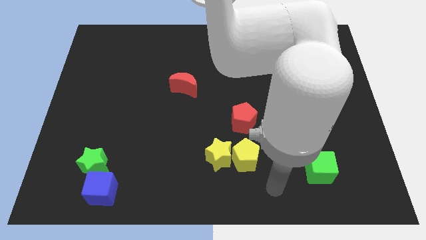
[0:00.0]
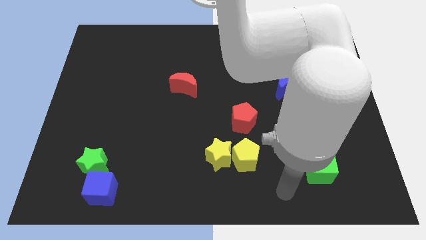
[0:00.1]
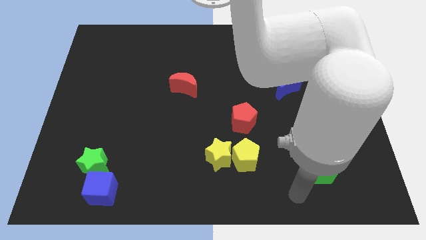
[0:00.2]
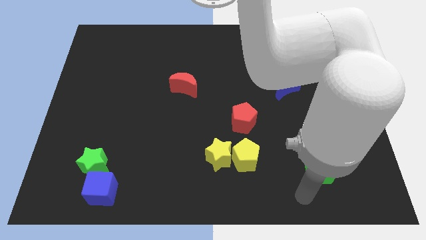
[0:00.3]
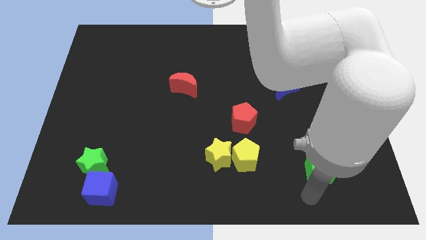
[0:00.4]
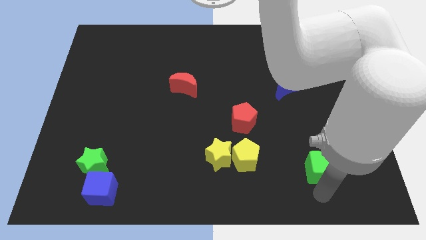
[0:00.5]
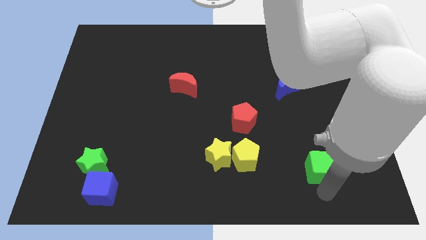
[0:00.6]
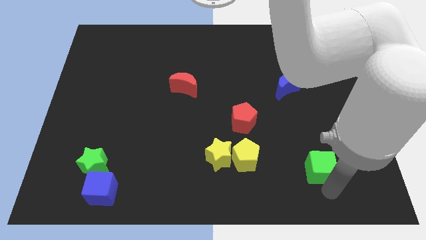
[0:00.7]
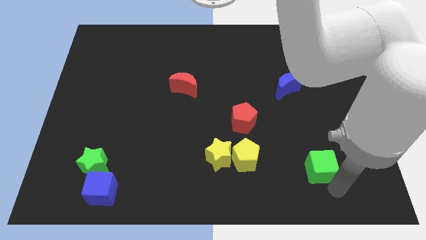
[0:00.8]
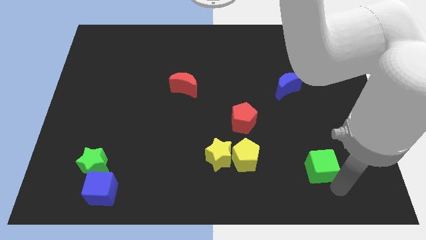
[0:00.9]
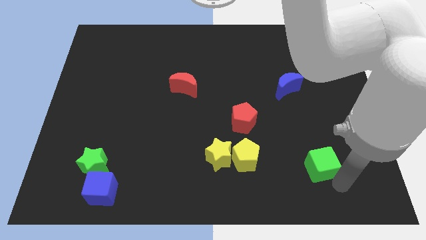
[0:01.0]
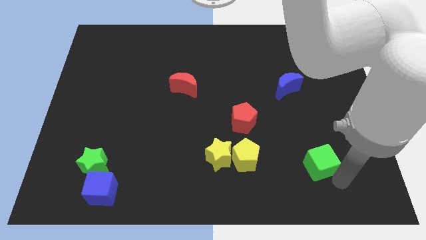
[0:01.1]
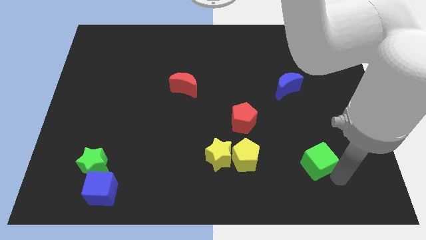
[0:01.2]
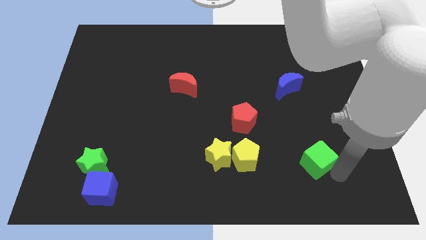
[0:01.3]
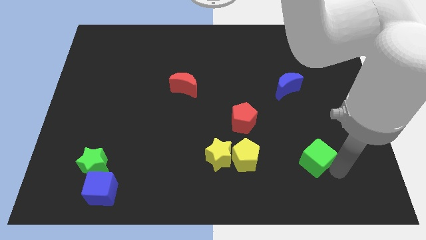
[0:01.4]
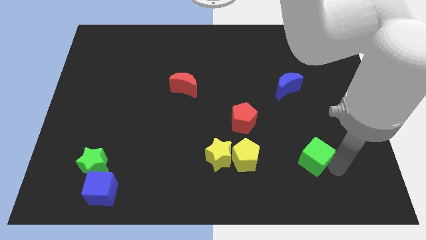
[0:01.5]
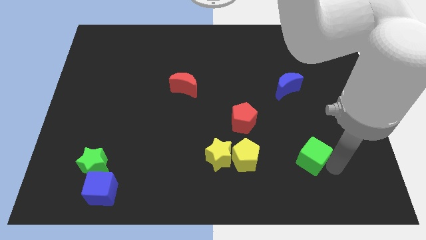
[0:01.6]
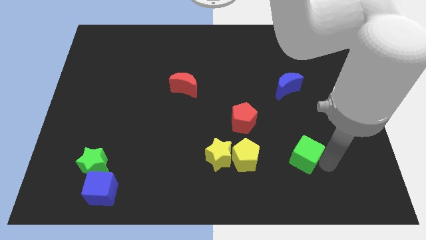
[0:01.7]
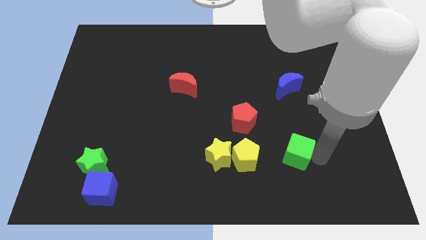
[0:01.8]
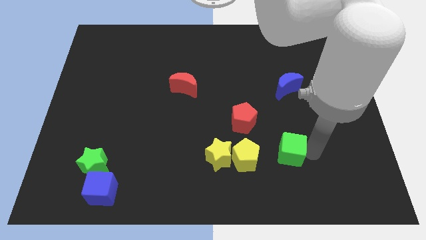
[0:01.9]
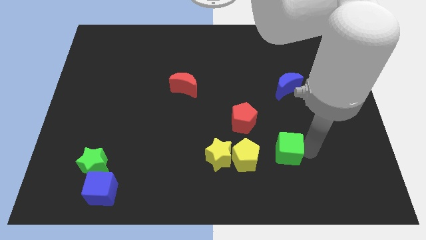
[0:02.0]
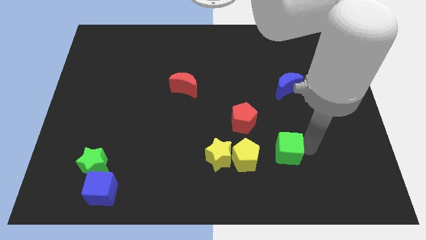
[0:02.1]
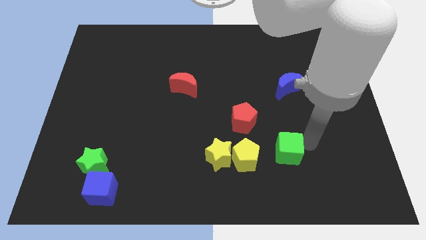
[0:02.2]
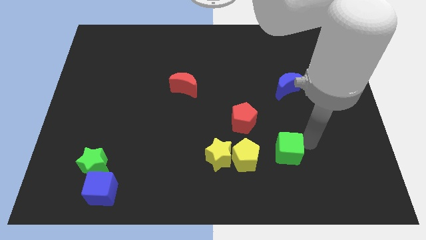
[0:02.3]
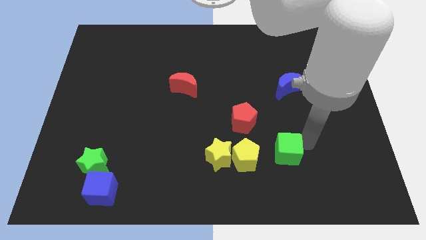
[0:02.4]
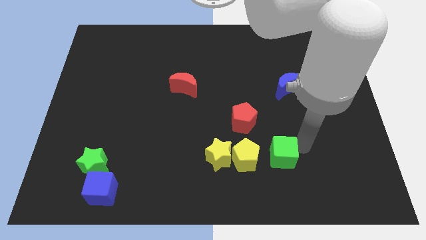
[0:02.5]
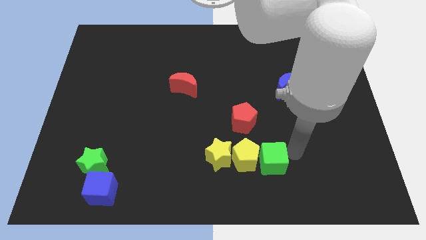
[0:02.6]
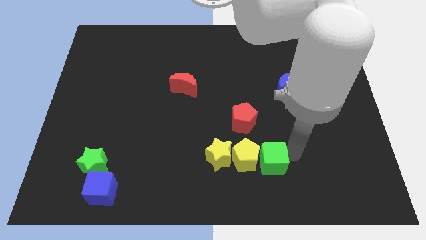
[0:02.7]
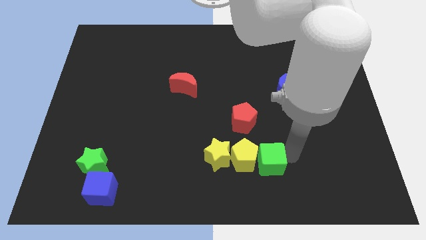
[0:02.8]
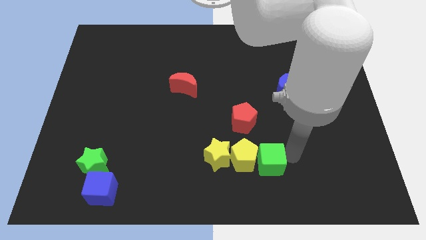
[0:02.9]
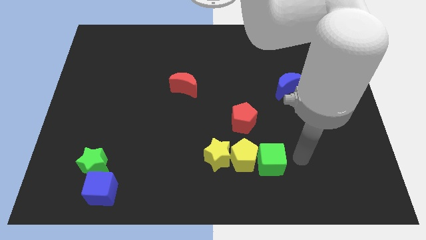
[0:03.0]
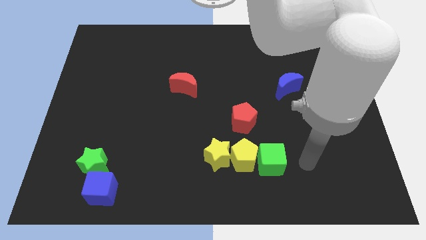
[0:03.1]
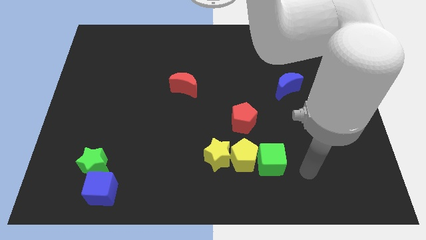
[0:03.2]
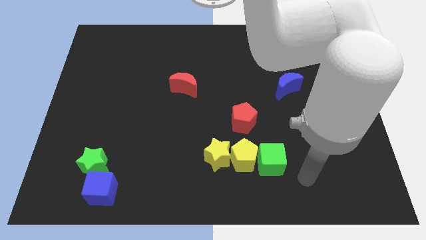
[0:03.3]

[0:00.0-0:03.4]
move the green cube to the right of the yellow pentagon

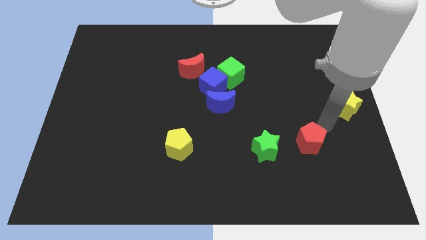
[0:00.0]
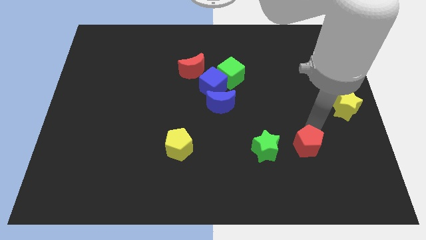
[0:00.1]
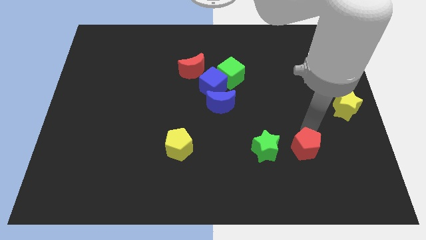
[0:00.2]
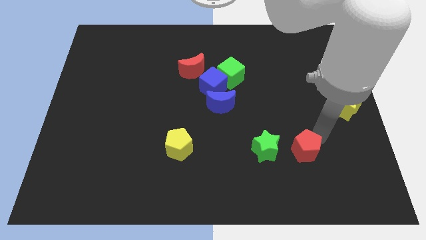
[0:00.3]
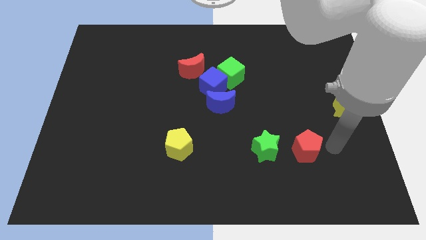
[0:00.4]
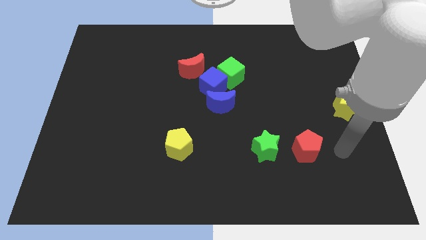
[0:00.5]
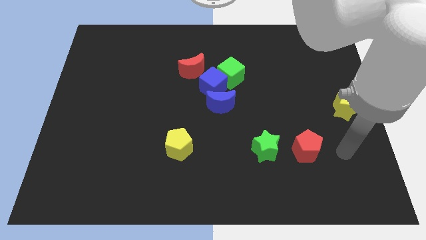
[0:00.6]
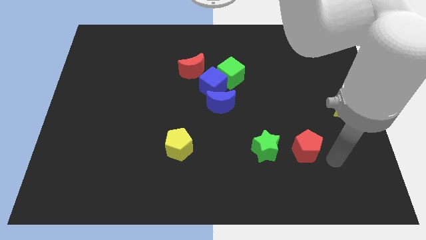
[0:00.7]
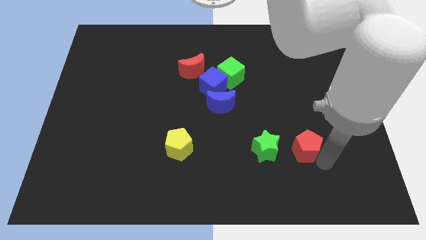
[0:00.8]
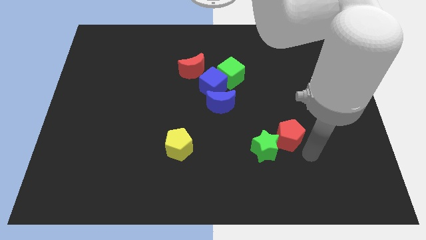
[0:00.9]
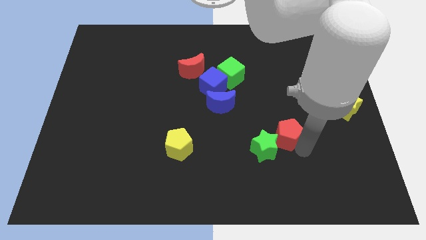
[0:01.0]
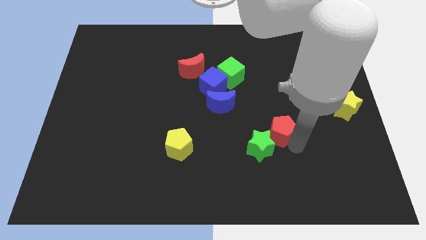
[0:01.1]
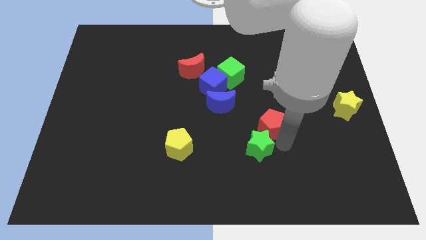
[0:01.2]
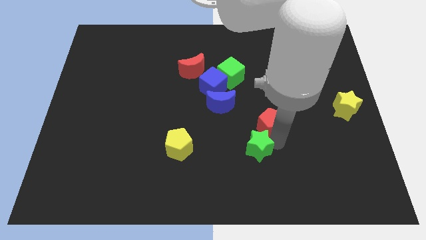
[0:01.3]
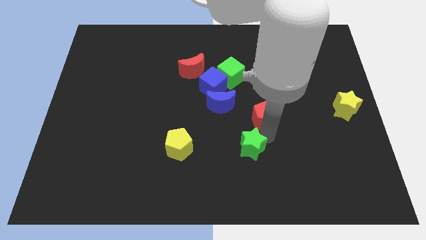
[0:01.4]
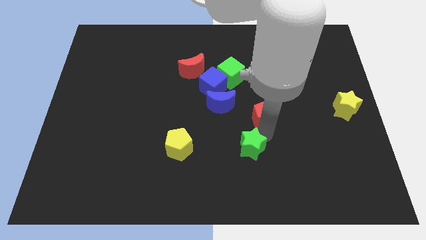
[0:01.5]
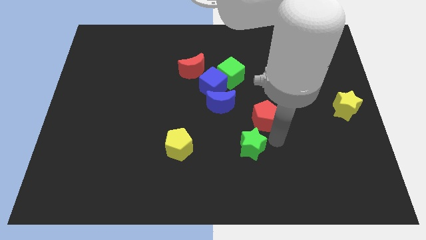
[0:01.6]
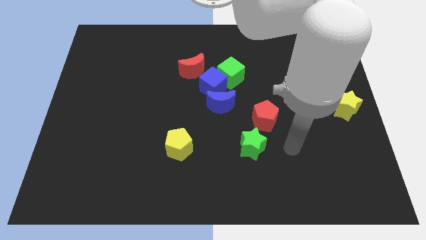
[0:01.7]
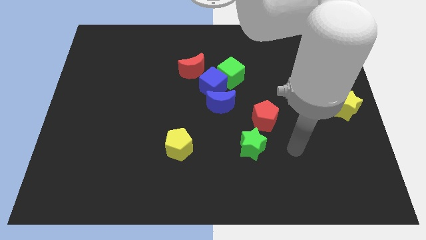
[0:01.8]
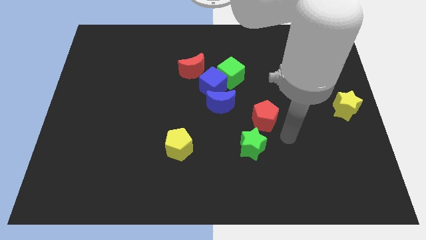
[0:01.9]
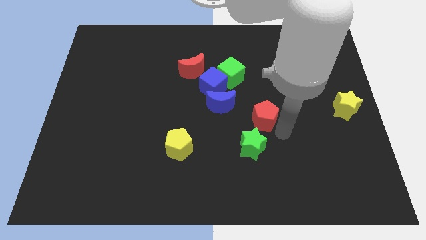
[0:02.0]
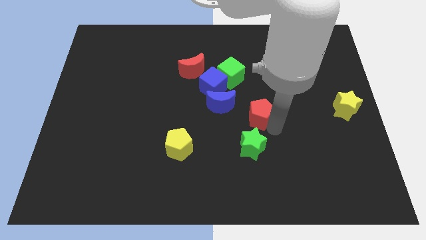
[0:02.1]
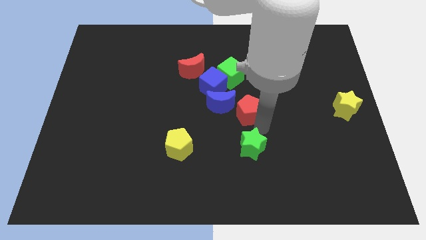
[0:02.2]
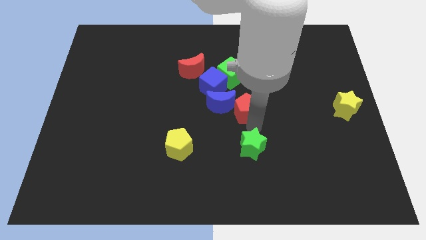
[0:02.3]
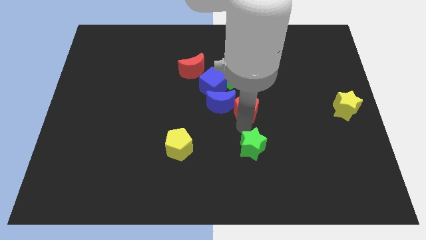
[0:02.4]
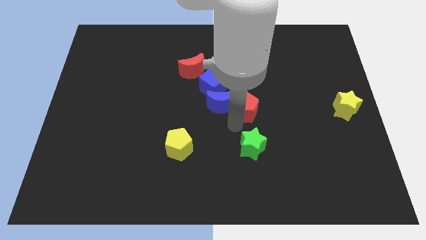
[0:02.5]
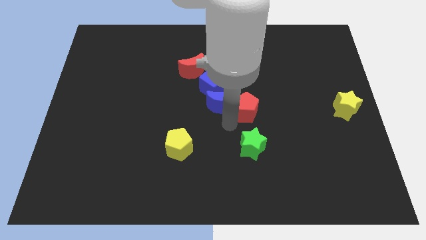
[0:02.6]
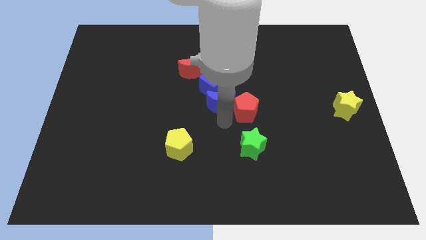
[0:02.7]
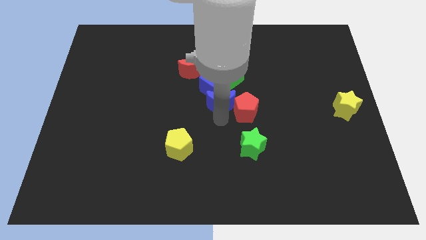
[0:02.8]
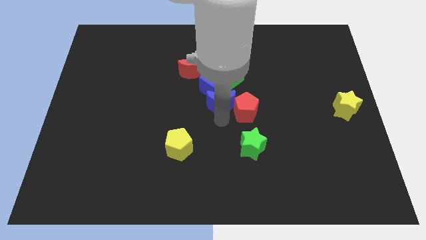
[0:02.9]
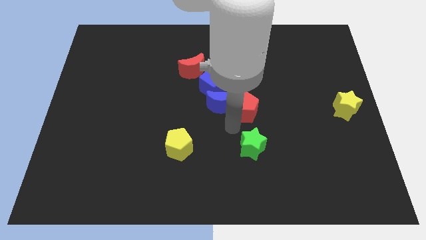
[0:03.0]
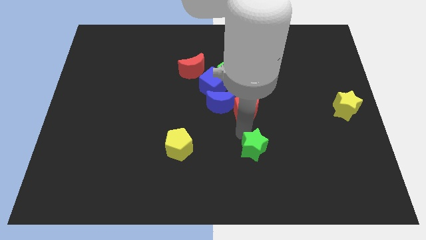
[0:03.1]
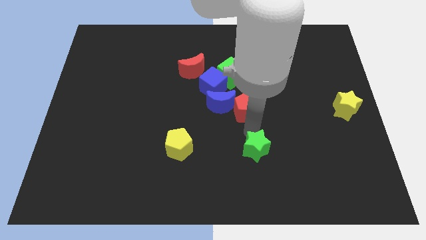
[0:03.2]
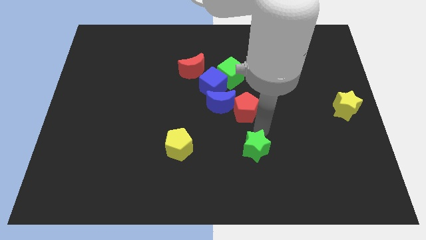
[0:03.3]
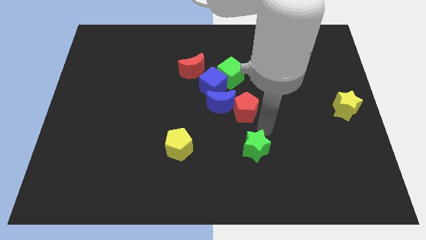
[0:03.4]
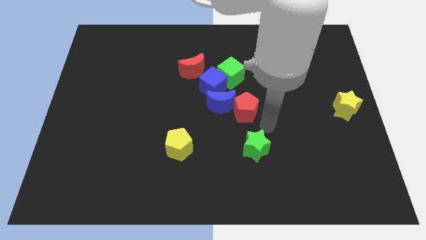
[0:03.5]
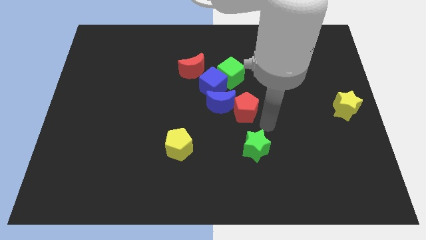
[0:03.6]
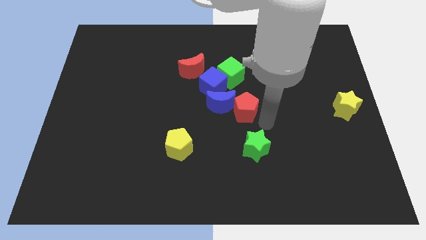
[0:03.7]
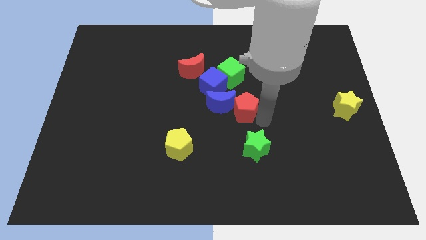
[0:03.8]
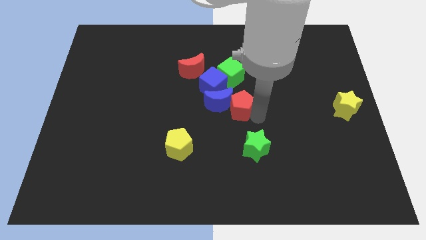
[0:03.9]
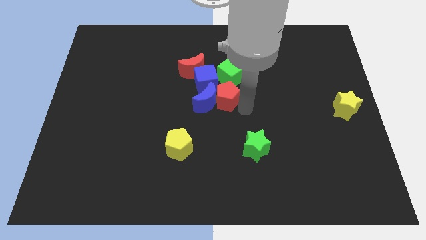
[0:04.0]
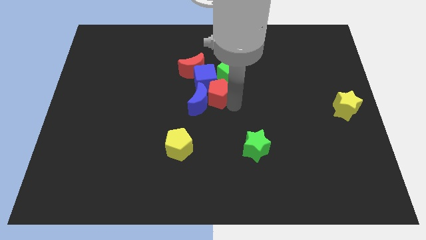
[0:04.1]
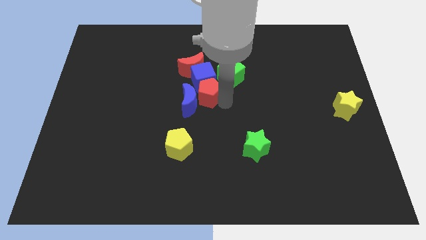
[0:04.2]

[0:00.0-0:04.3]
place the red pentagon at the center of the board

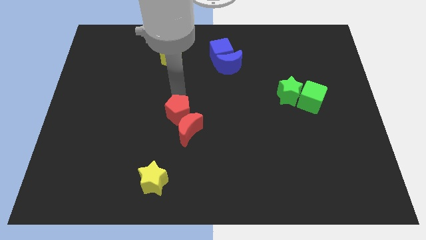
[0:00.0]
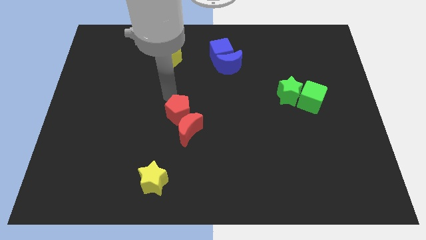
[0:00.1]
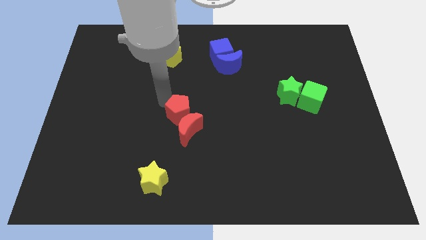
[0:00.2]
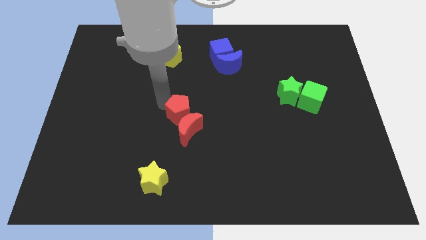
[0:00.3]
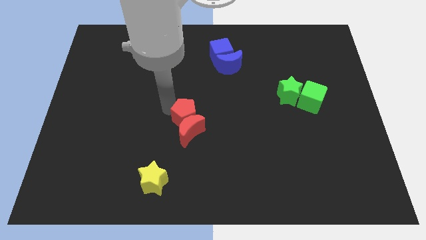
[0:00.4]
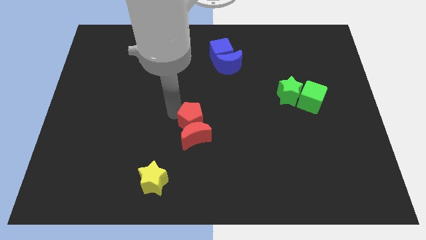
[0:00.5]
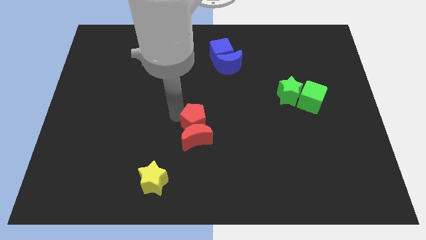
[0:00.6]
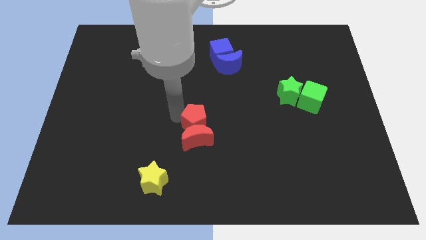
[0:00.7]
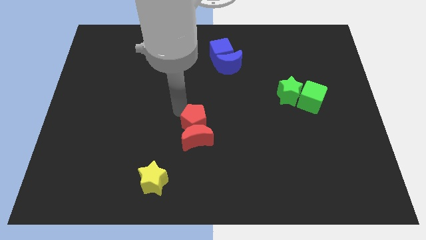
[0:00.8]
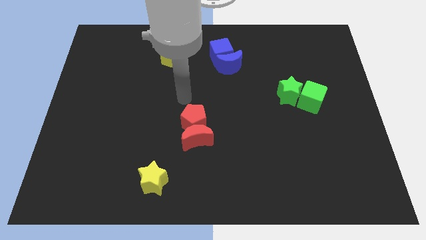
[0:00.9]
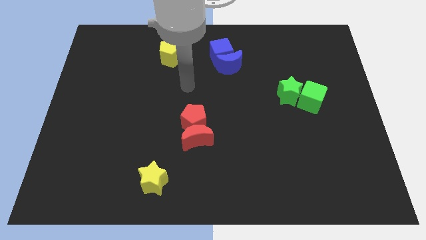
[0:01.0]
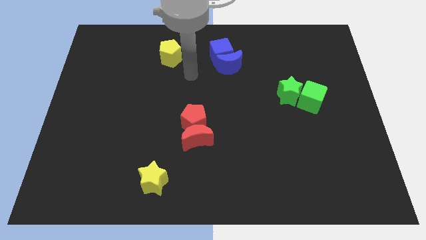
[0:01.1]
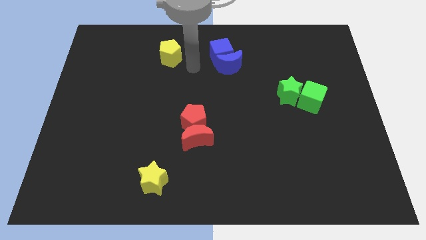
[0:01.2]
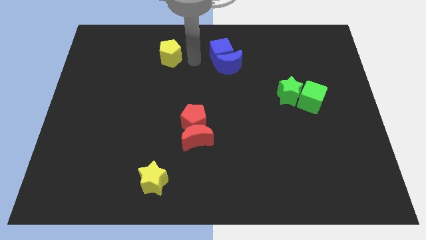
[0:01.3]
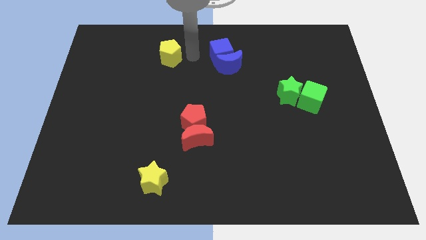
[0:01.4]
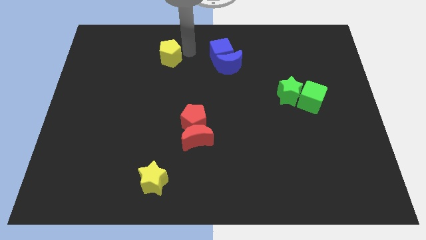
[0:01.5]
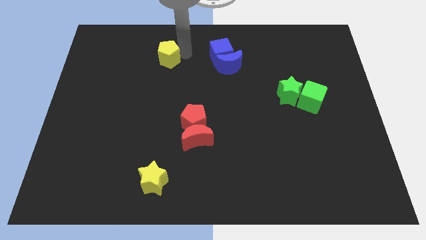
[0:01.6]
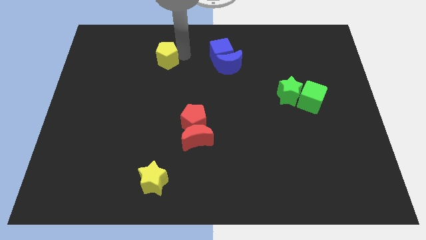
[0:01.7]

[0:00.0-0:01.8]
move your arm towards the right side of the yellow pentagon
